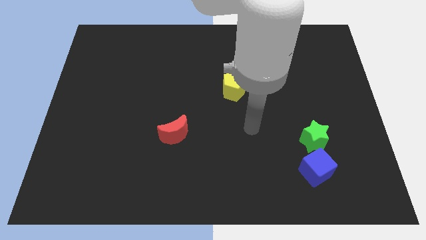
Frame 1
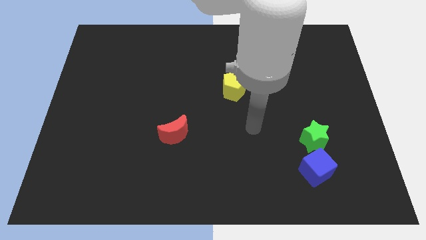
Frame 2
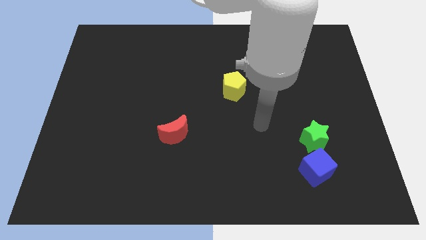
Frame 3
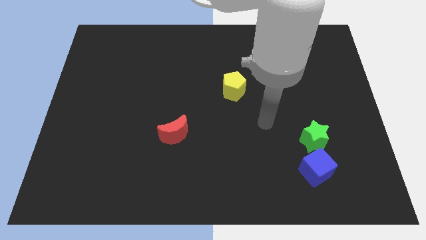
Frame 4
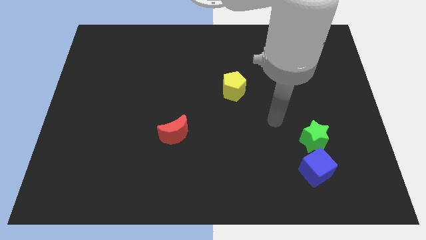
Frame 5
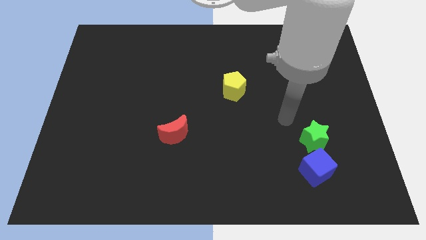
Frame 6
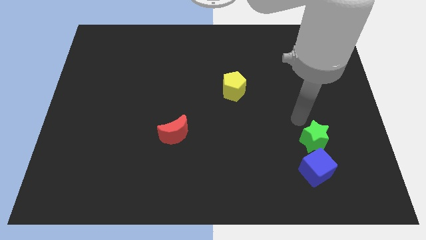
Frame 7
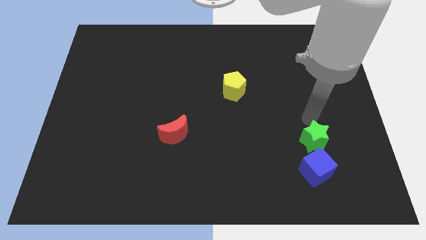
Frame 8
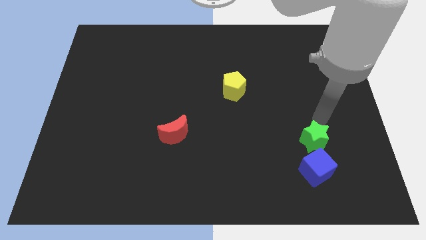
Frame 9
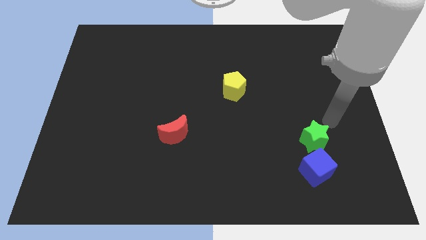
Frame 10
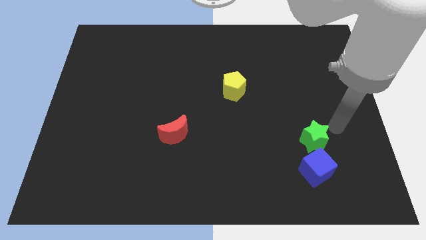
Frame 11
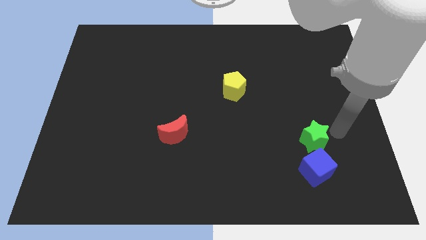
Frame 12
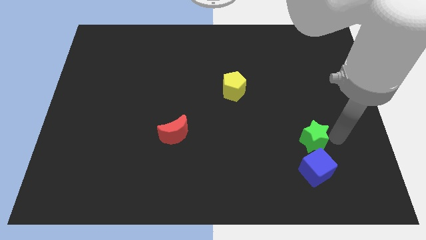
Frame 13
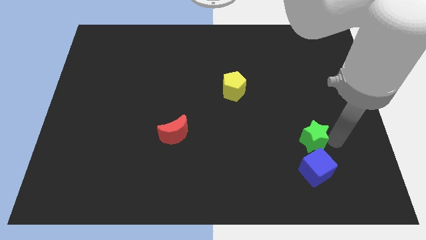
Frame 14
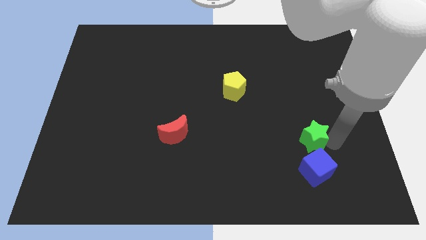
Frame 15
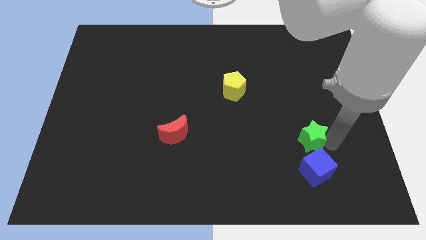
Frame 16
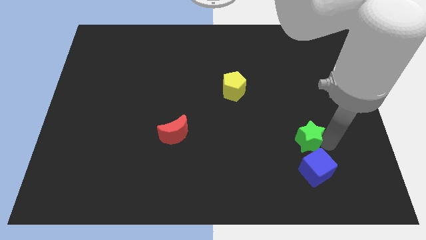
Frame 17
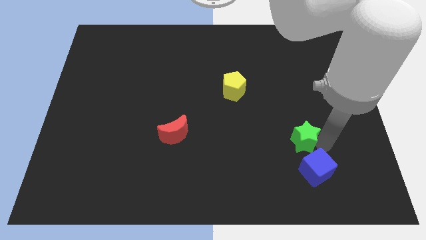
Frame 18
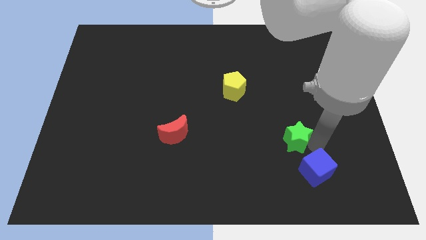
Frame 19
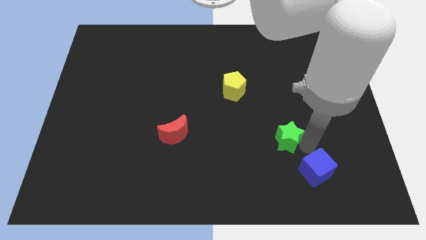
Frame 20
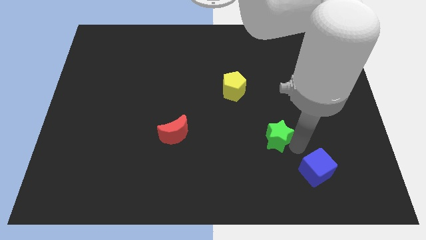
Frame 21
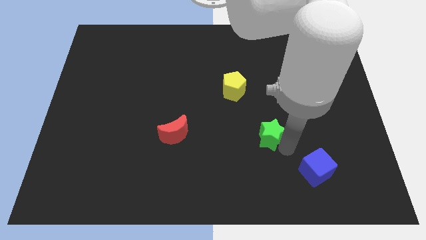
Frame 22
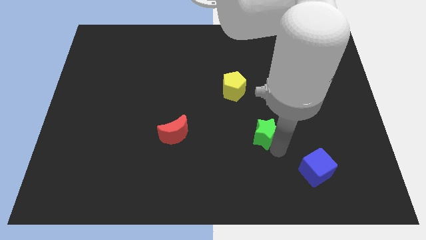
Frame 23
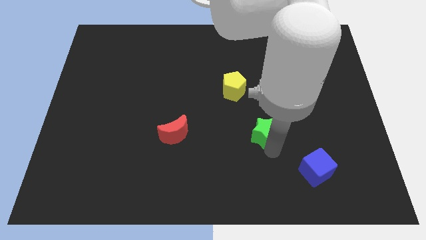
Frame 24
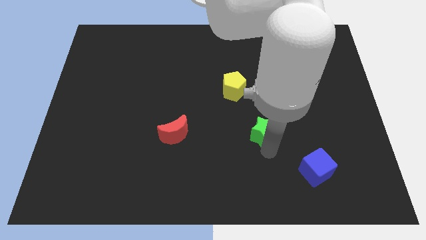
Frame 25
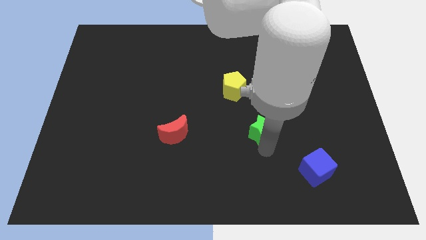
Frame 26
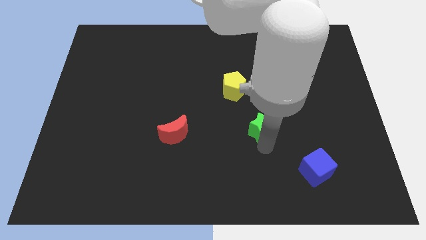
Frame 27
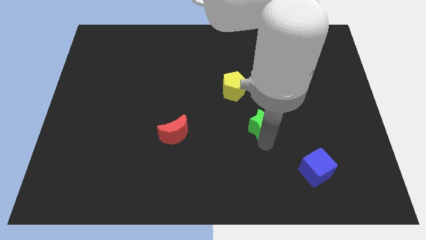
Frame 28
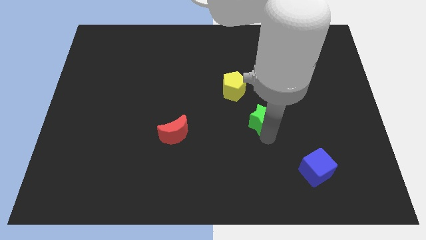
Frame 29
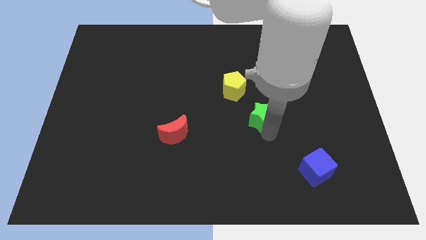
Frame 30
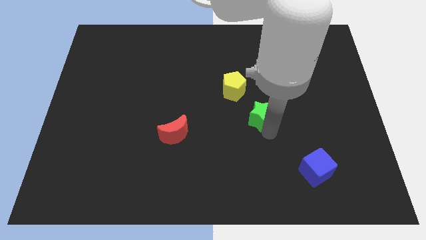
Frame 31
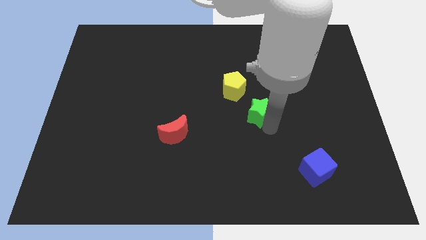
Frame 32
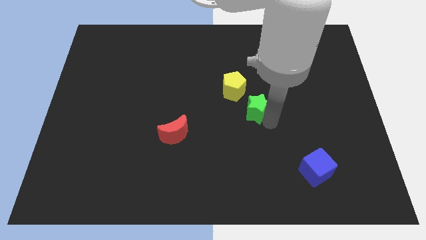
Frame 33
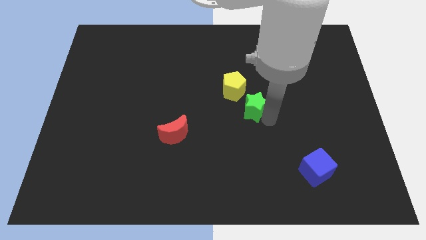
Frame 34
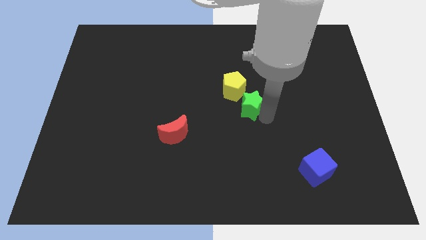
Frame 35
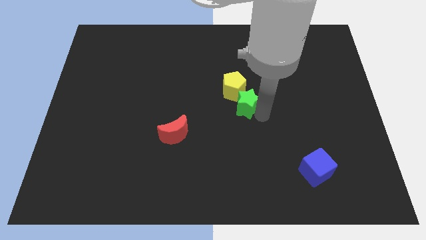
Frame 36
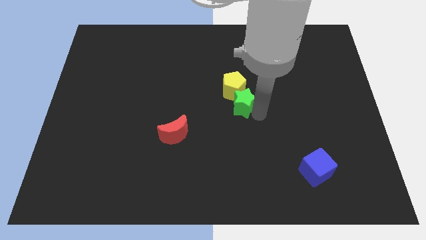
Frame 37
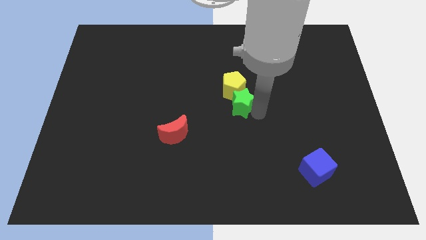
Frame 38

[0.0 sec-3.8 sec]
move the green block to the yellow pentagon

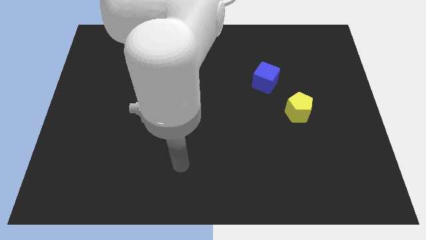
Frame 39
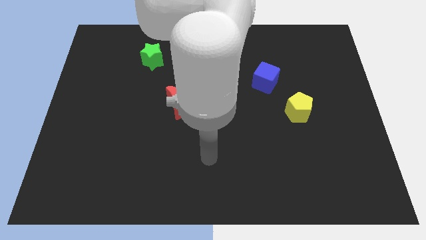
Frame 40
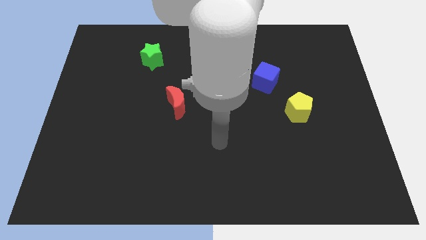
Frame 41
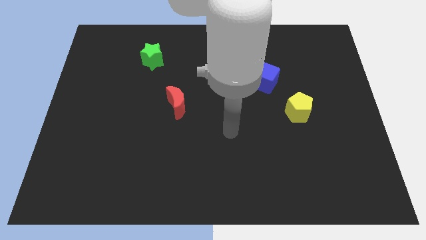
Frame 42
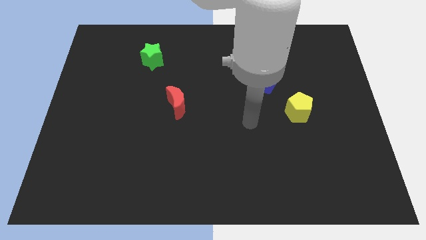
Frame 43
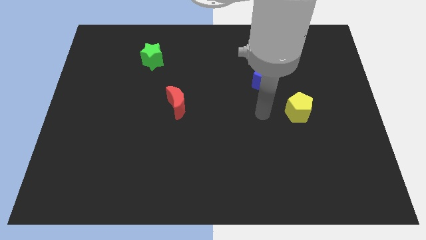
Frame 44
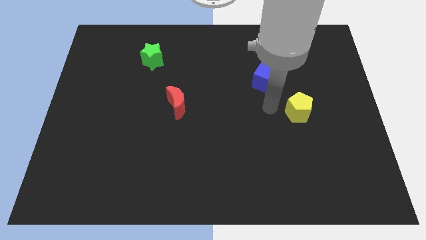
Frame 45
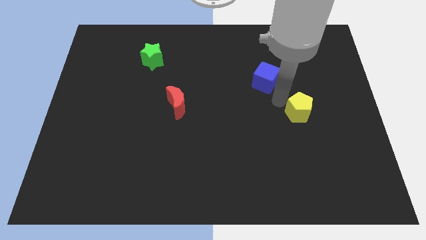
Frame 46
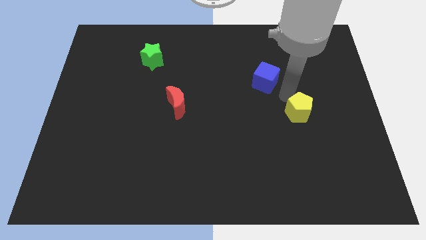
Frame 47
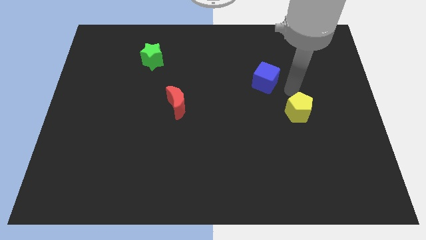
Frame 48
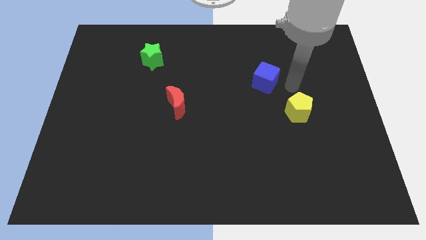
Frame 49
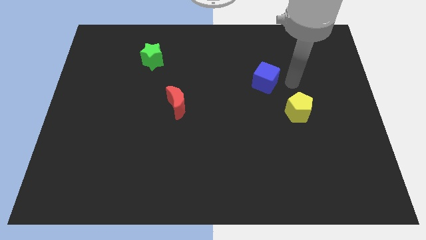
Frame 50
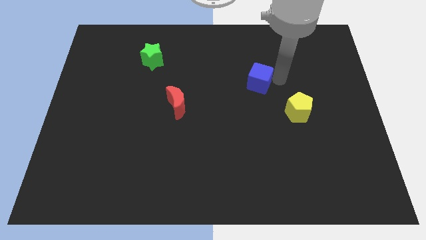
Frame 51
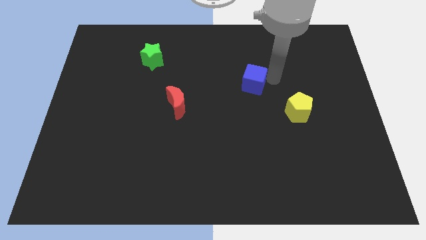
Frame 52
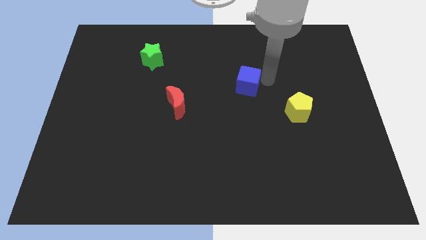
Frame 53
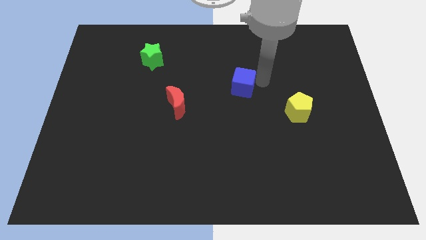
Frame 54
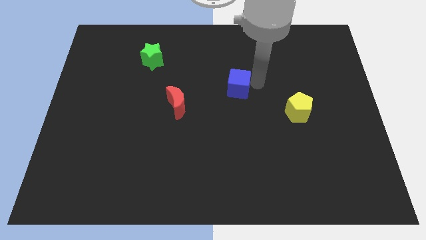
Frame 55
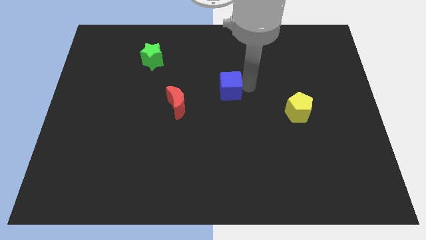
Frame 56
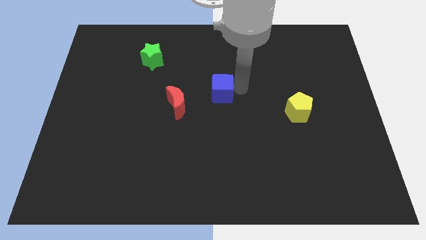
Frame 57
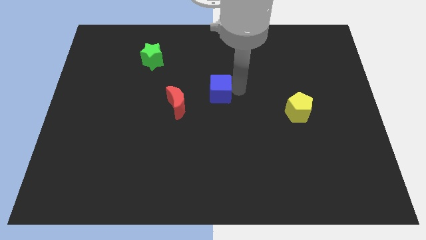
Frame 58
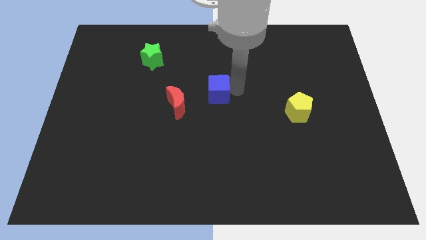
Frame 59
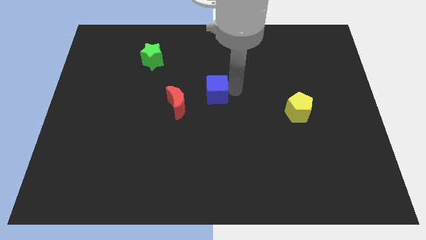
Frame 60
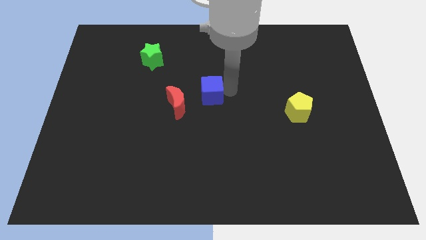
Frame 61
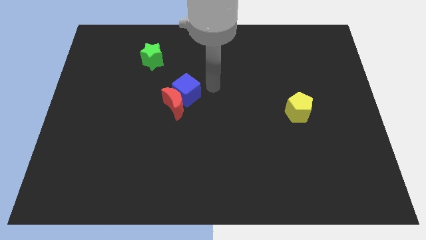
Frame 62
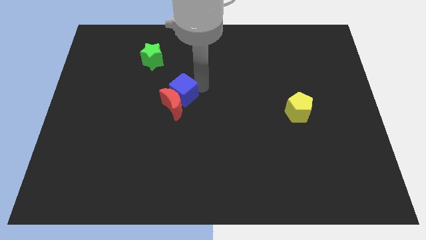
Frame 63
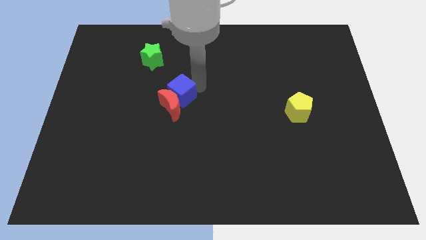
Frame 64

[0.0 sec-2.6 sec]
put the blue block close to the moon

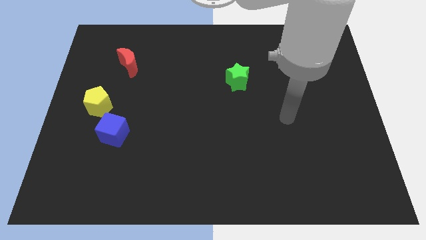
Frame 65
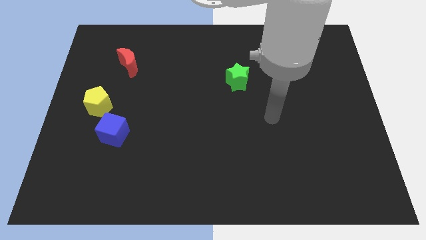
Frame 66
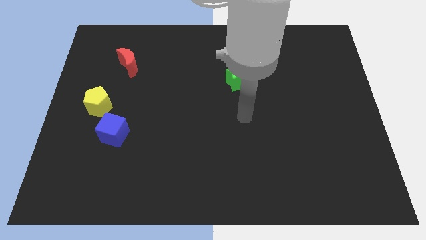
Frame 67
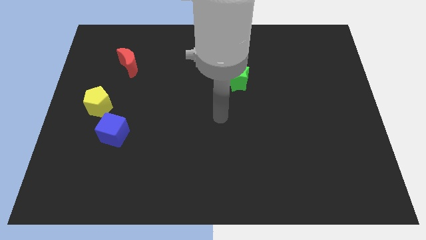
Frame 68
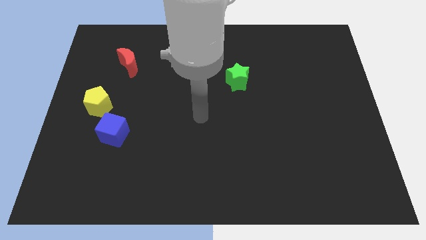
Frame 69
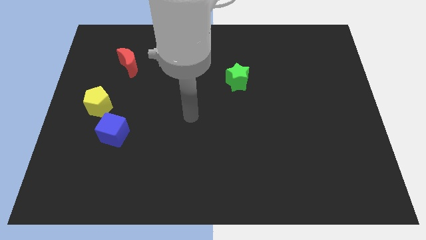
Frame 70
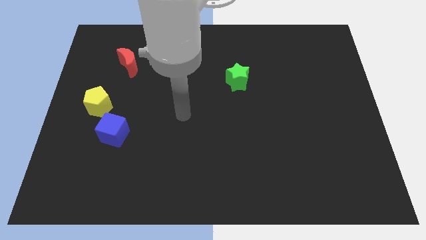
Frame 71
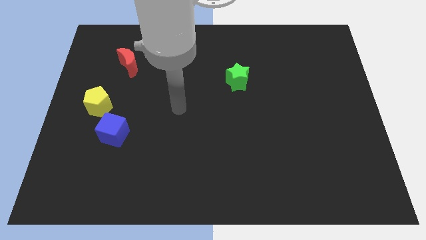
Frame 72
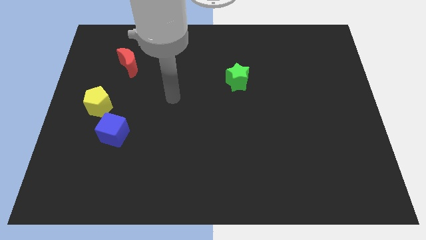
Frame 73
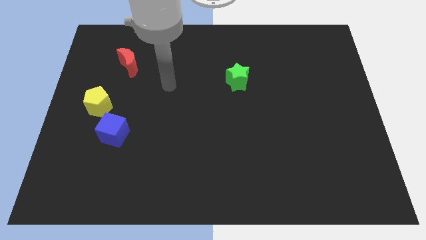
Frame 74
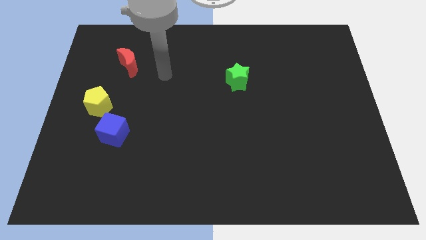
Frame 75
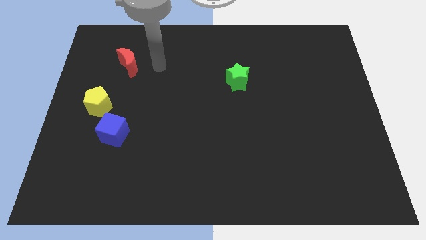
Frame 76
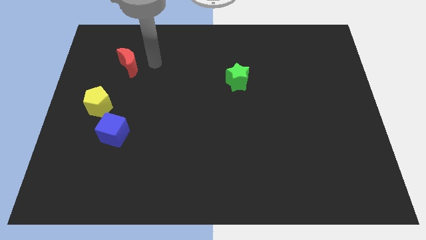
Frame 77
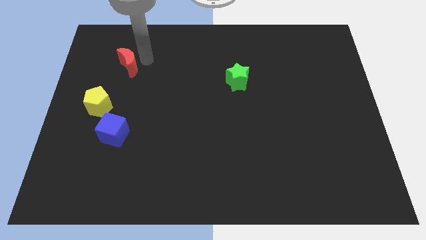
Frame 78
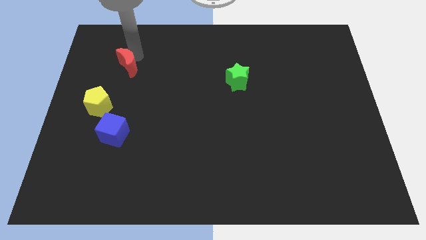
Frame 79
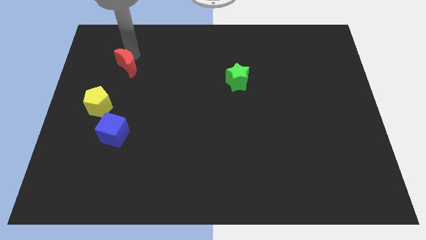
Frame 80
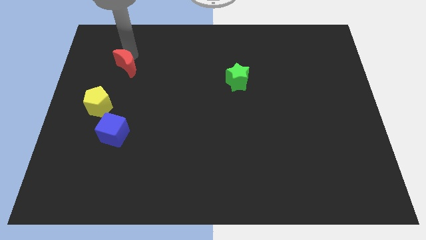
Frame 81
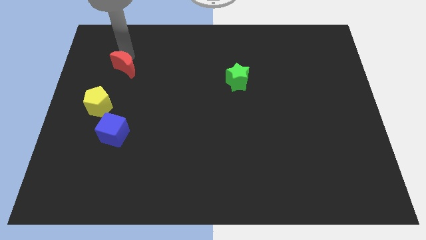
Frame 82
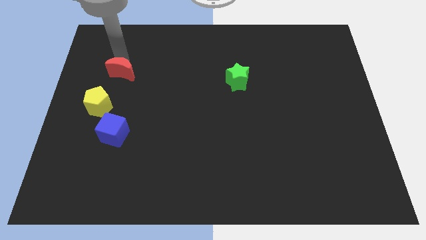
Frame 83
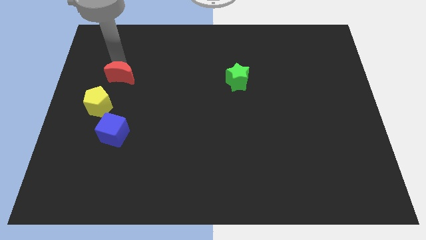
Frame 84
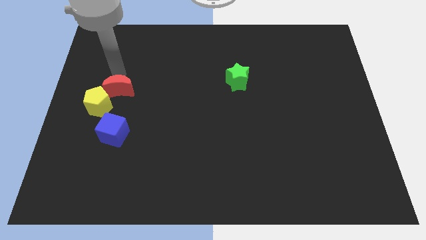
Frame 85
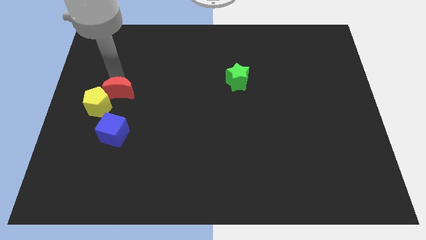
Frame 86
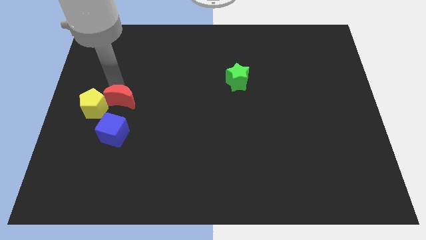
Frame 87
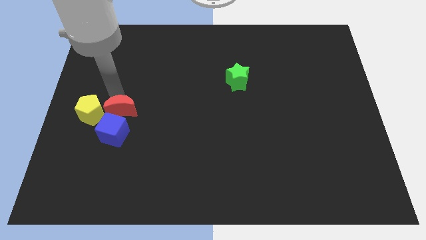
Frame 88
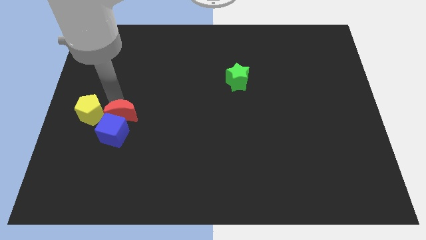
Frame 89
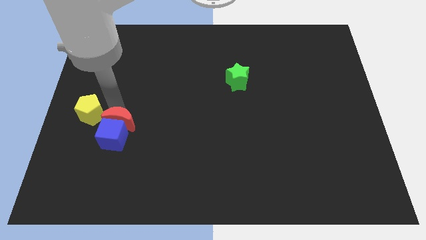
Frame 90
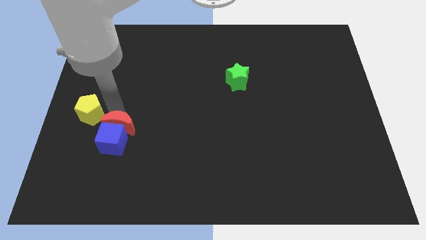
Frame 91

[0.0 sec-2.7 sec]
move the moon to the blue block
